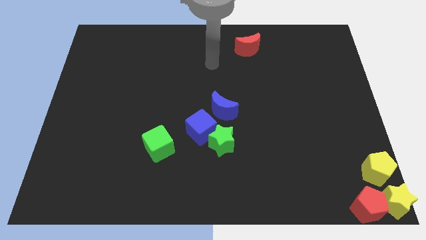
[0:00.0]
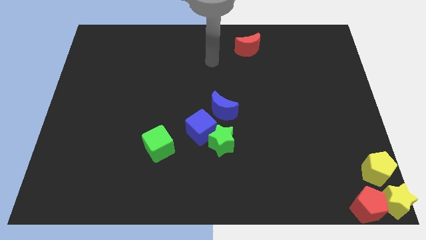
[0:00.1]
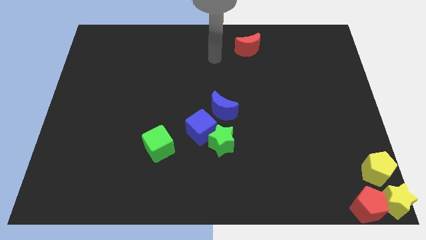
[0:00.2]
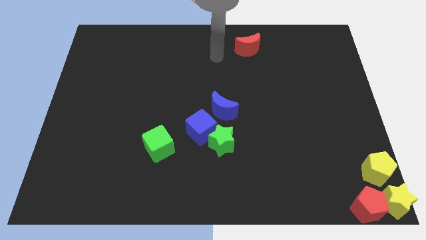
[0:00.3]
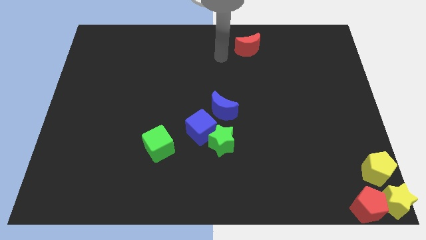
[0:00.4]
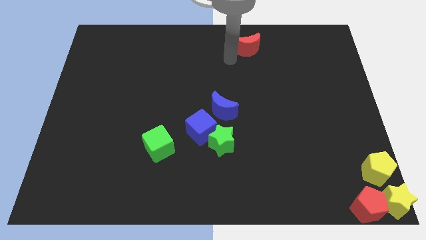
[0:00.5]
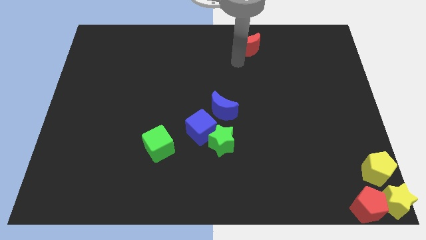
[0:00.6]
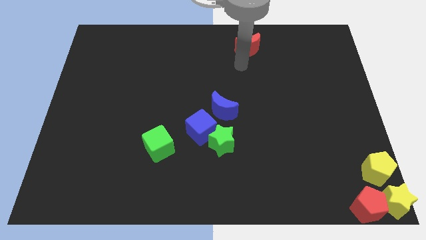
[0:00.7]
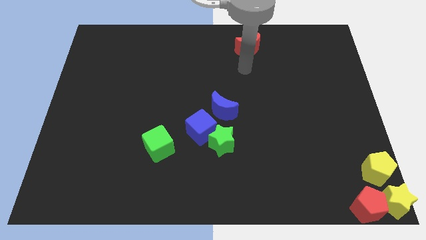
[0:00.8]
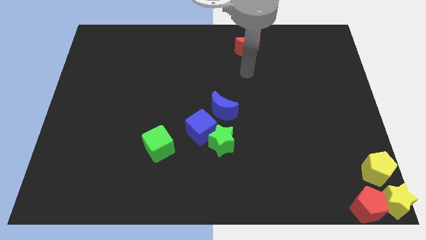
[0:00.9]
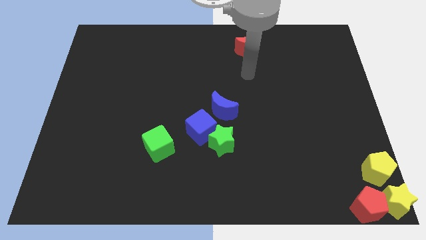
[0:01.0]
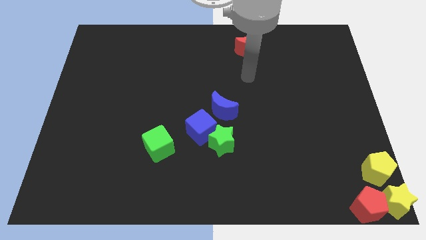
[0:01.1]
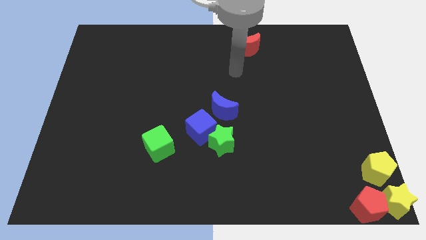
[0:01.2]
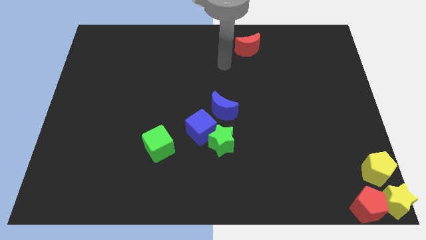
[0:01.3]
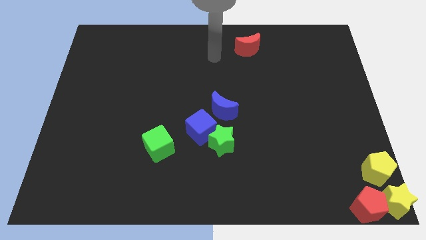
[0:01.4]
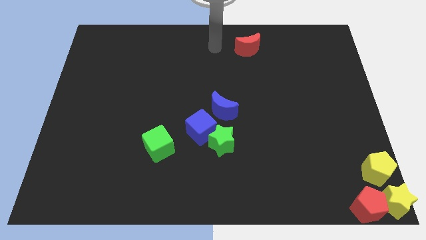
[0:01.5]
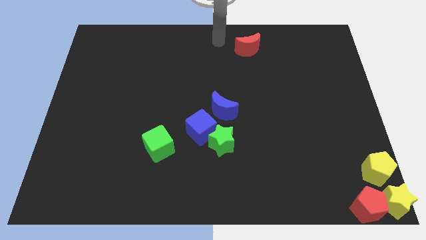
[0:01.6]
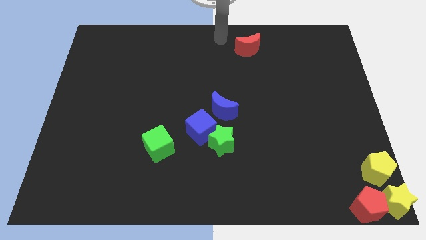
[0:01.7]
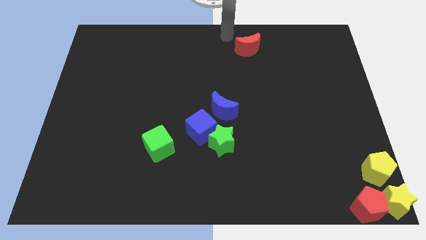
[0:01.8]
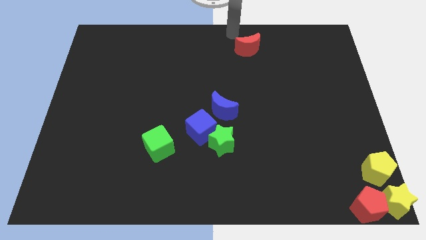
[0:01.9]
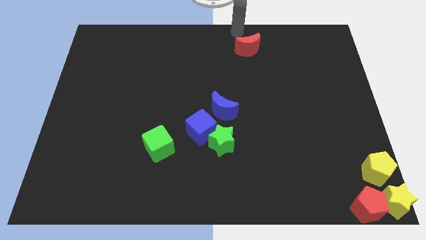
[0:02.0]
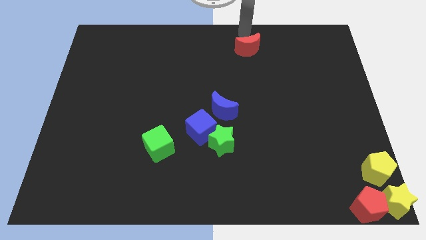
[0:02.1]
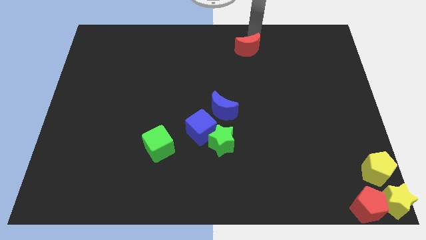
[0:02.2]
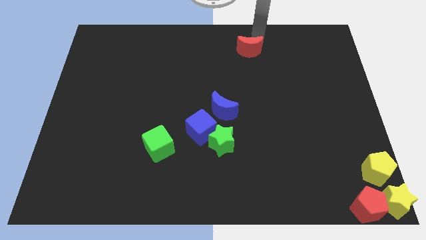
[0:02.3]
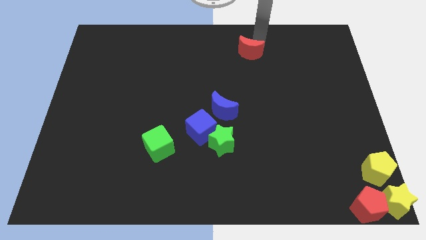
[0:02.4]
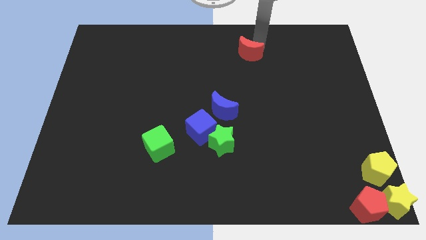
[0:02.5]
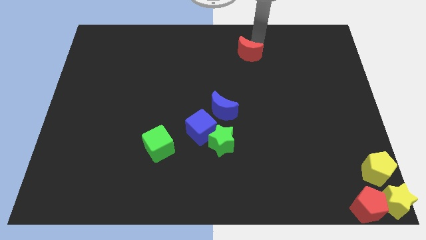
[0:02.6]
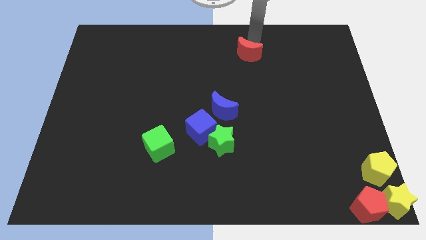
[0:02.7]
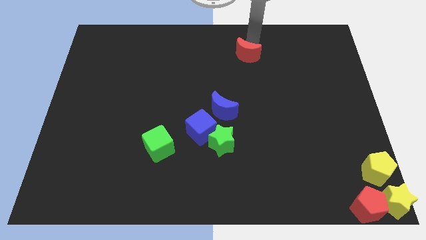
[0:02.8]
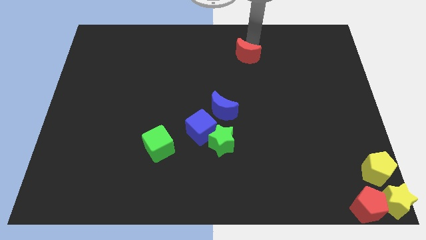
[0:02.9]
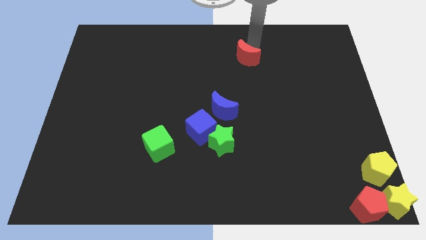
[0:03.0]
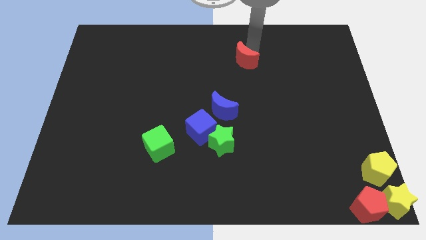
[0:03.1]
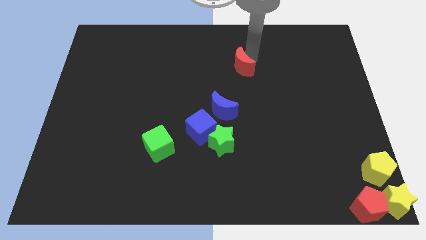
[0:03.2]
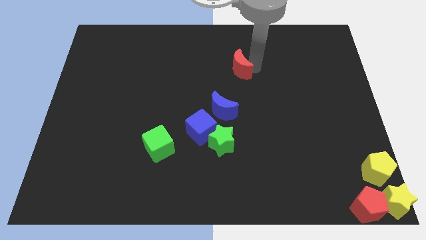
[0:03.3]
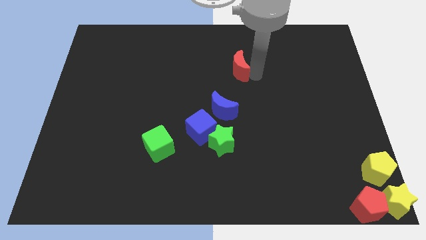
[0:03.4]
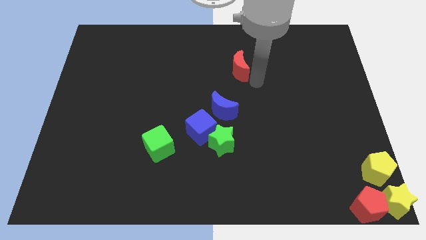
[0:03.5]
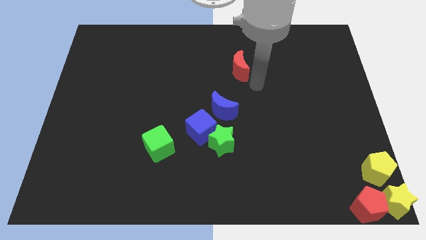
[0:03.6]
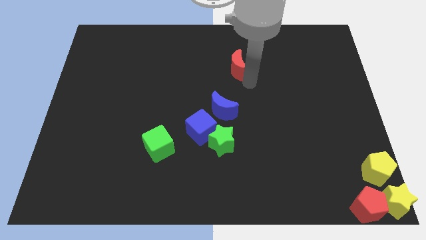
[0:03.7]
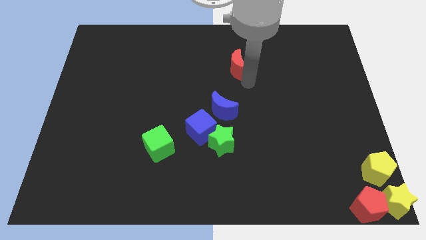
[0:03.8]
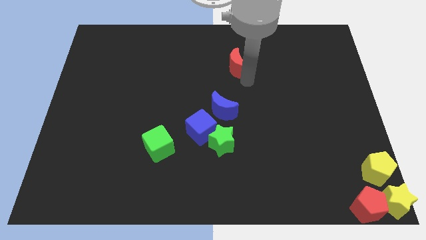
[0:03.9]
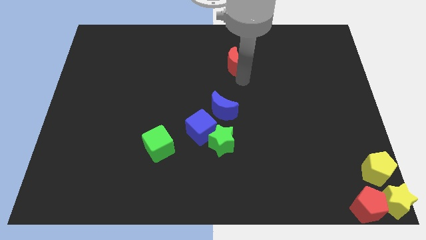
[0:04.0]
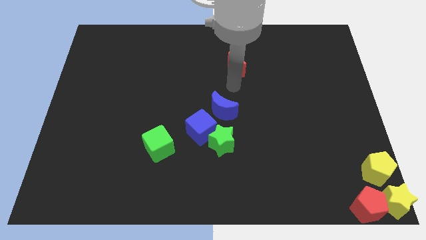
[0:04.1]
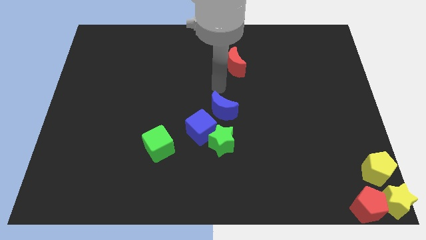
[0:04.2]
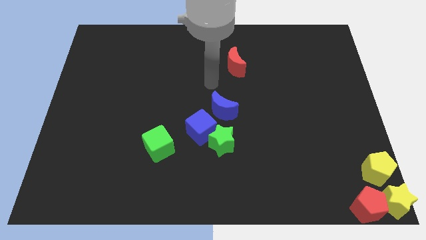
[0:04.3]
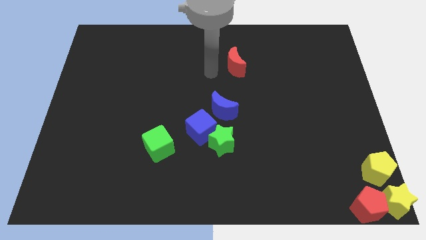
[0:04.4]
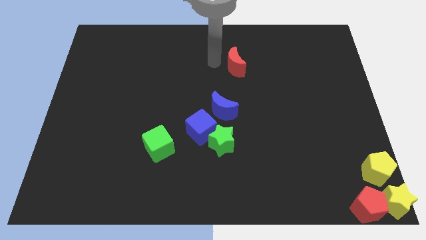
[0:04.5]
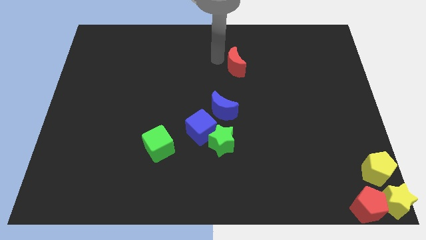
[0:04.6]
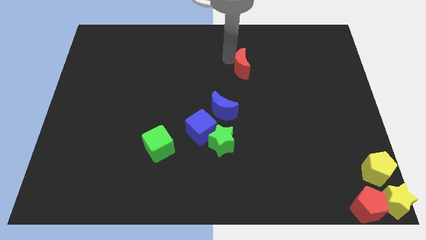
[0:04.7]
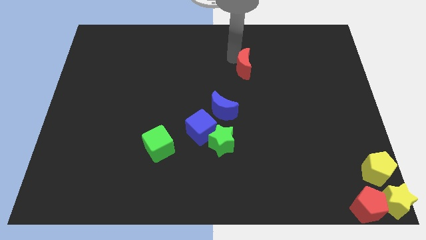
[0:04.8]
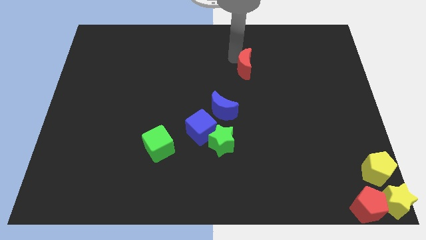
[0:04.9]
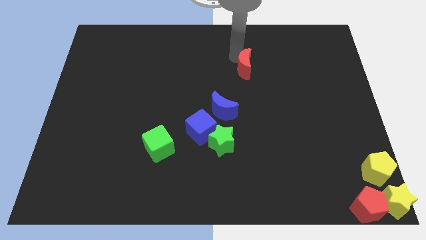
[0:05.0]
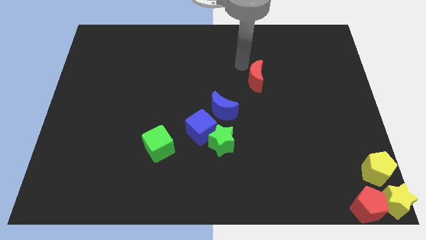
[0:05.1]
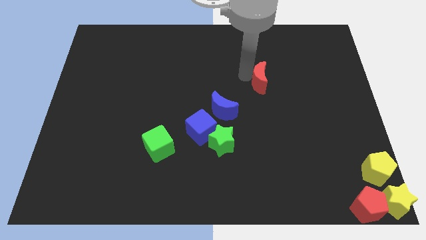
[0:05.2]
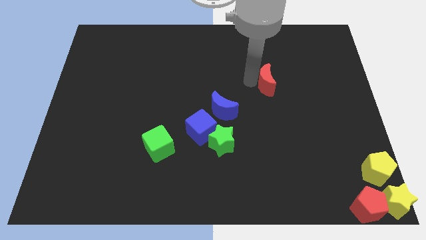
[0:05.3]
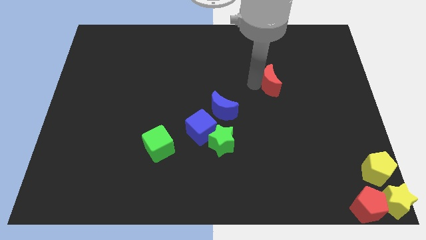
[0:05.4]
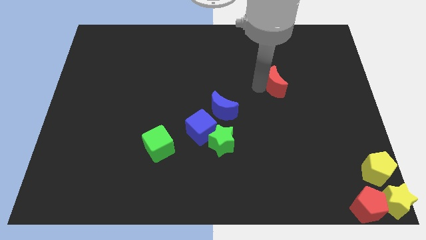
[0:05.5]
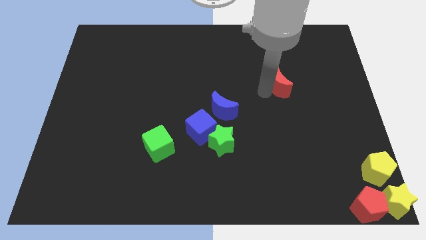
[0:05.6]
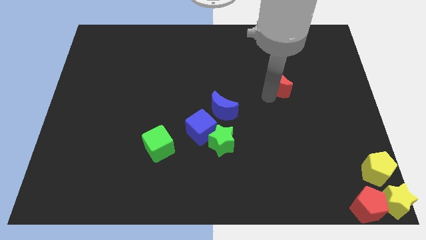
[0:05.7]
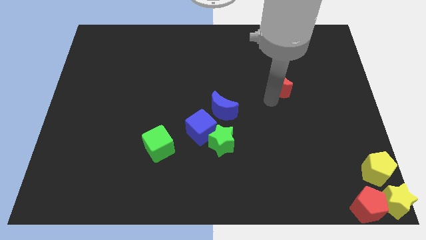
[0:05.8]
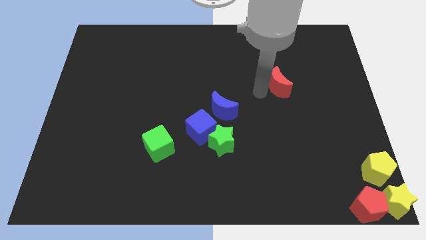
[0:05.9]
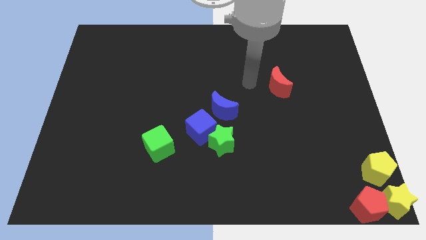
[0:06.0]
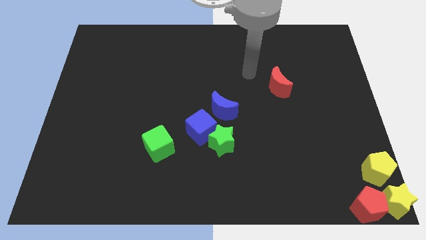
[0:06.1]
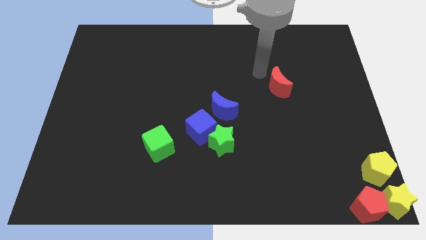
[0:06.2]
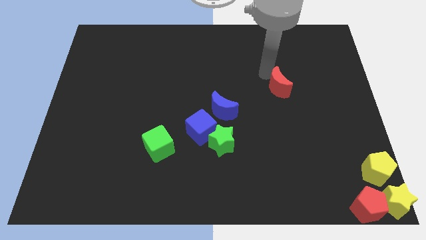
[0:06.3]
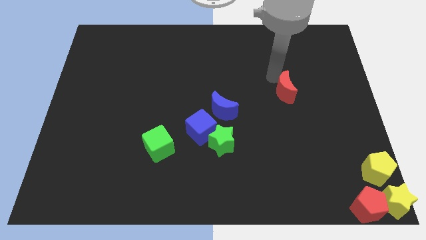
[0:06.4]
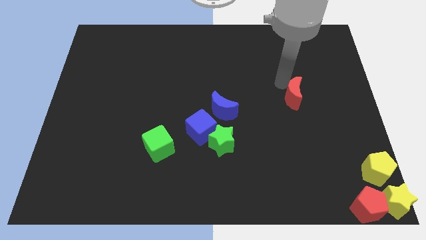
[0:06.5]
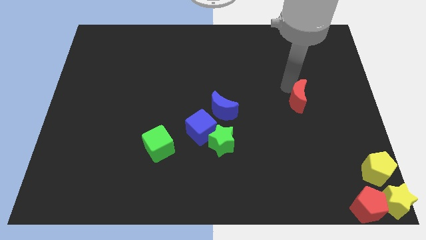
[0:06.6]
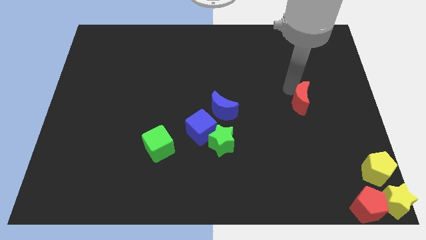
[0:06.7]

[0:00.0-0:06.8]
push the red crescent towards the bottom side of the board

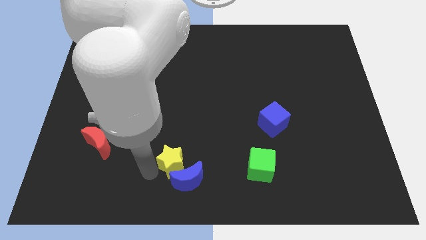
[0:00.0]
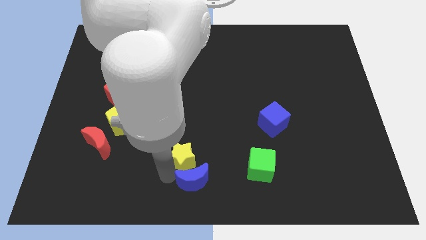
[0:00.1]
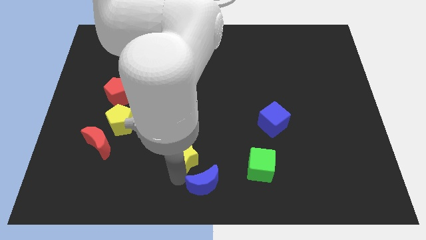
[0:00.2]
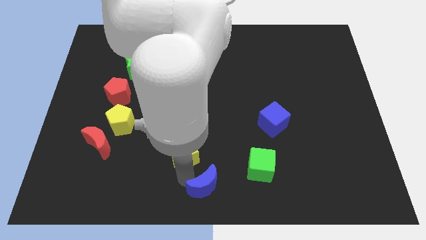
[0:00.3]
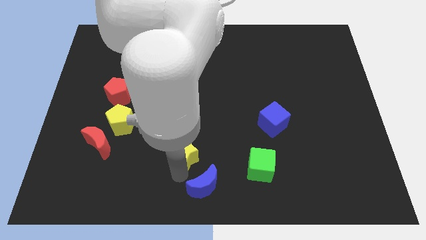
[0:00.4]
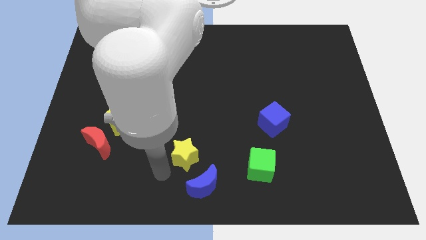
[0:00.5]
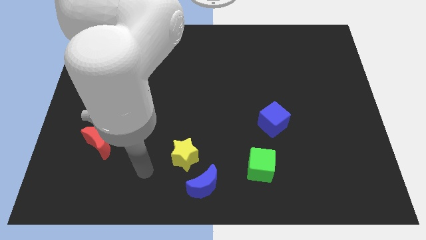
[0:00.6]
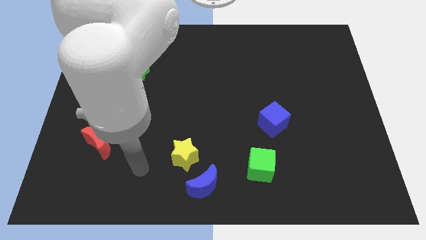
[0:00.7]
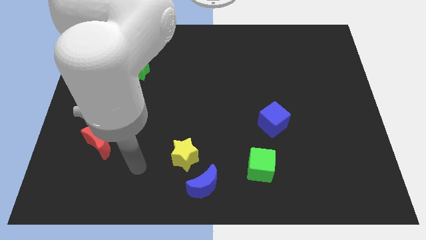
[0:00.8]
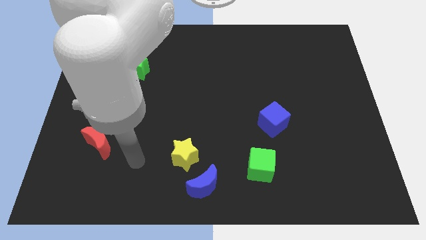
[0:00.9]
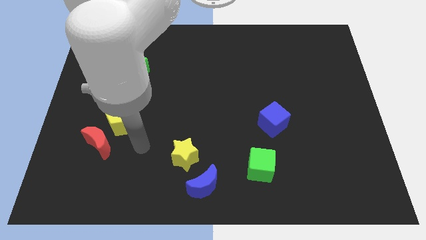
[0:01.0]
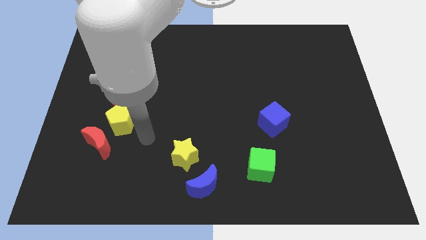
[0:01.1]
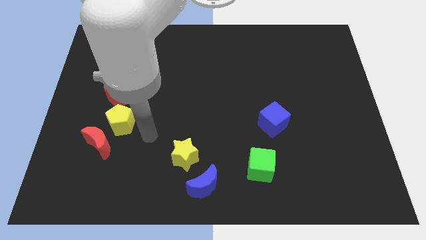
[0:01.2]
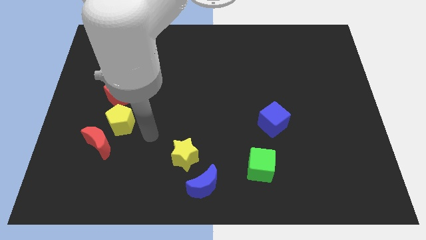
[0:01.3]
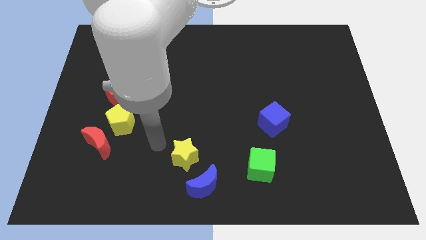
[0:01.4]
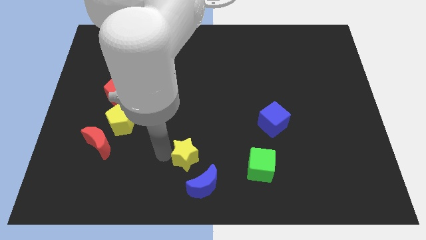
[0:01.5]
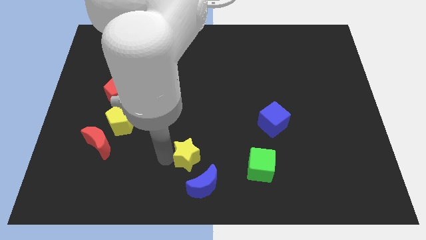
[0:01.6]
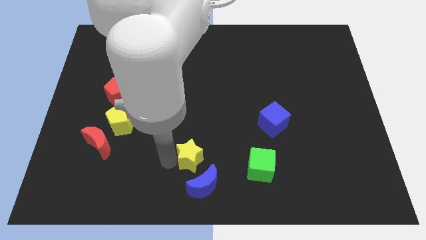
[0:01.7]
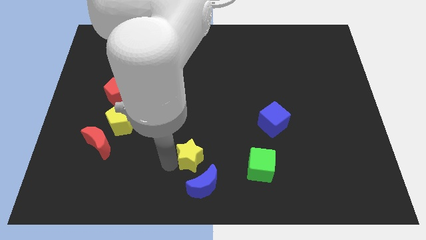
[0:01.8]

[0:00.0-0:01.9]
separate yellow star and the blue crescent

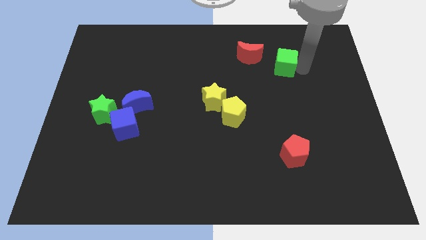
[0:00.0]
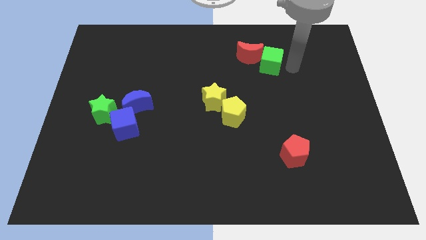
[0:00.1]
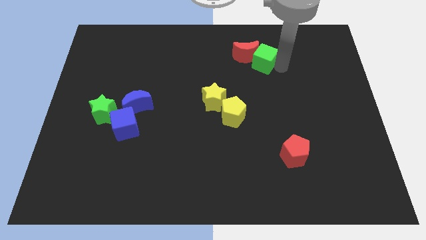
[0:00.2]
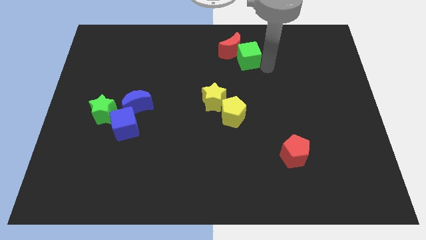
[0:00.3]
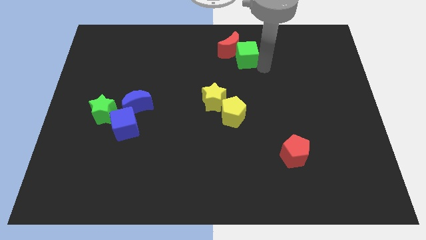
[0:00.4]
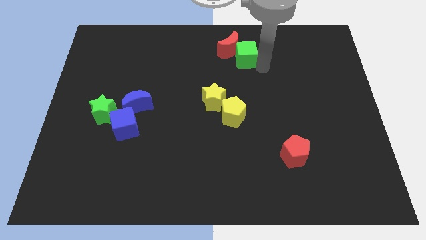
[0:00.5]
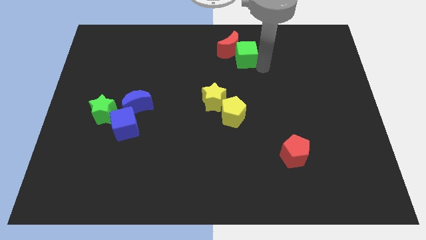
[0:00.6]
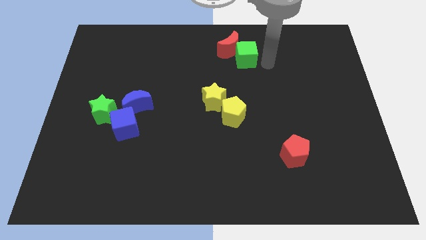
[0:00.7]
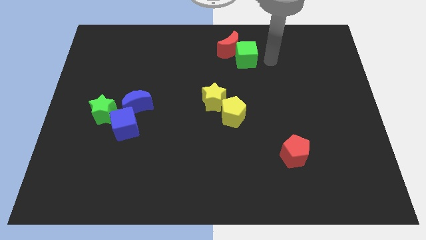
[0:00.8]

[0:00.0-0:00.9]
slide the green cube into the red moon
